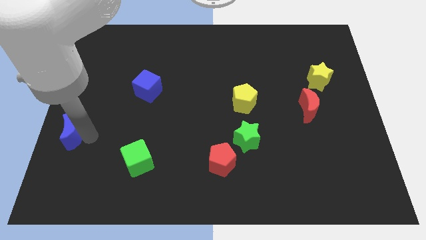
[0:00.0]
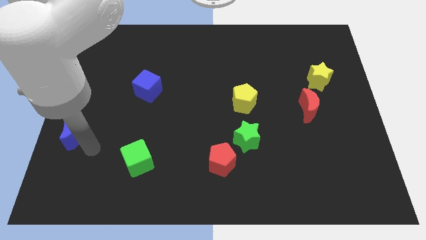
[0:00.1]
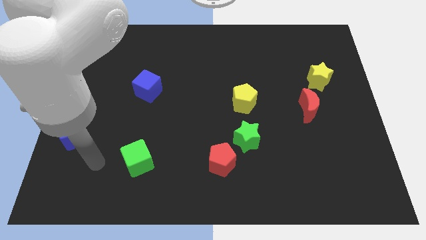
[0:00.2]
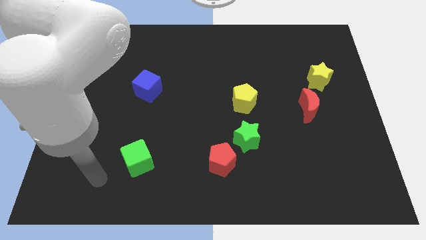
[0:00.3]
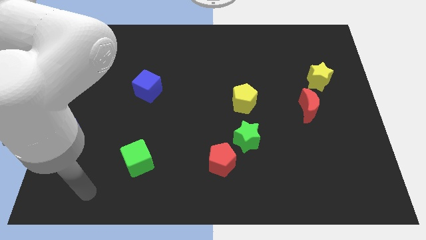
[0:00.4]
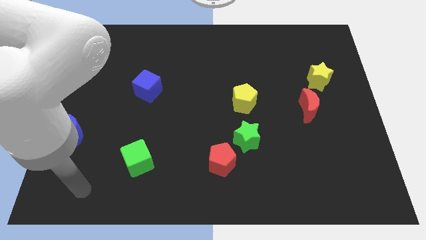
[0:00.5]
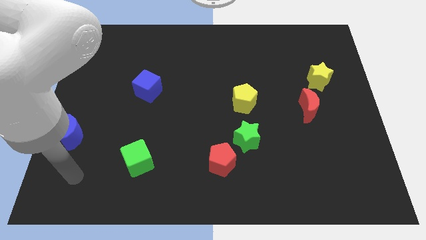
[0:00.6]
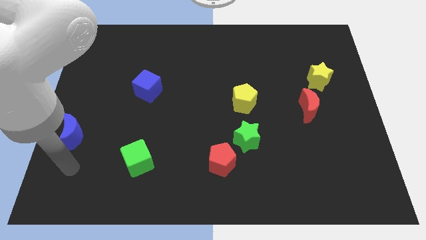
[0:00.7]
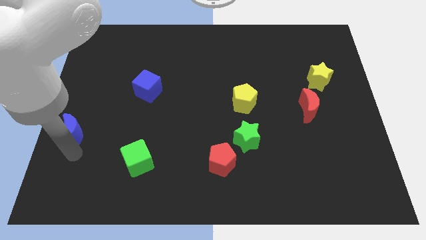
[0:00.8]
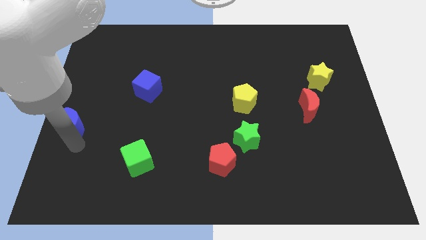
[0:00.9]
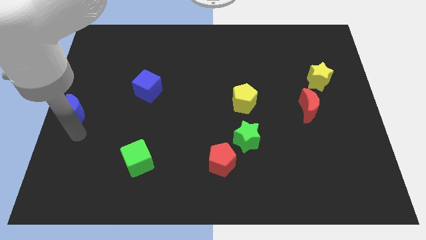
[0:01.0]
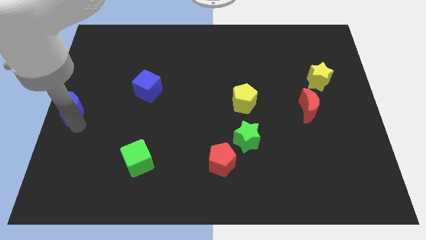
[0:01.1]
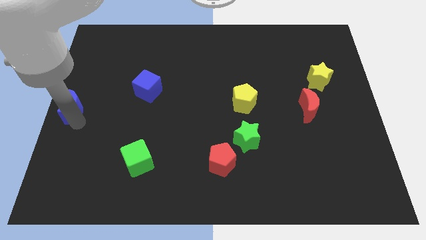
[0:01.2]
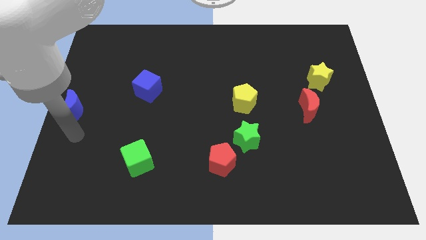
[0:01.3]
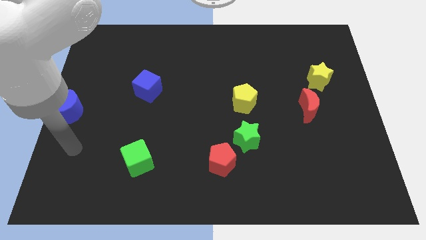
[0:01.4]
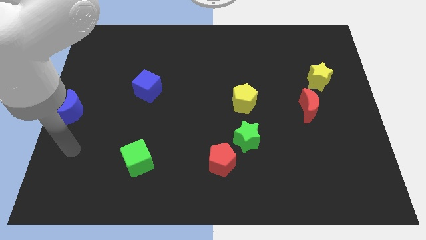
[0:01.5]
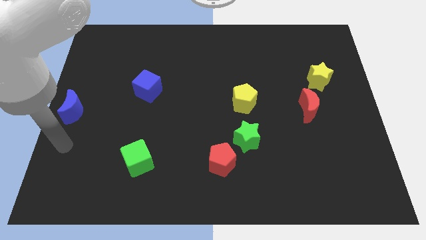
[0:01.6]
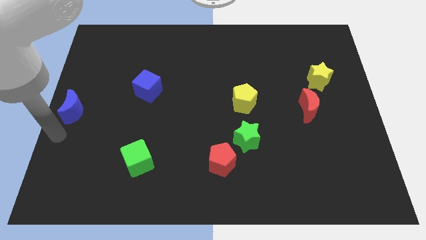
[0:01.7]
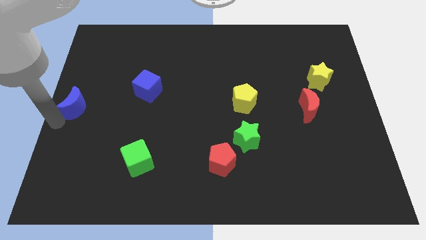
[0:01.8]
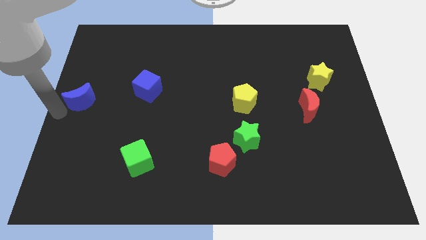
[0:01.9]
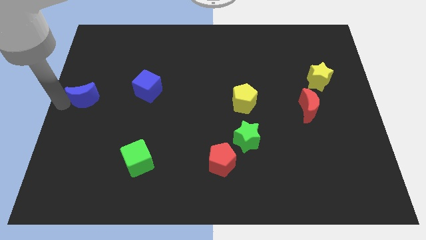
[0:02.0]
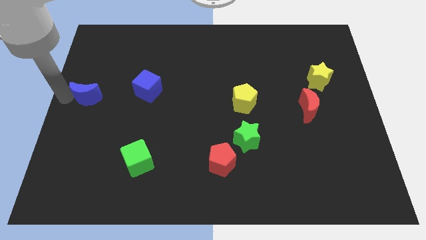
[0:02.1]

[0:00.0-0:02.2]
push the blue crescent to the left of the blue cube

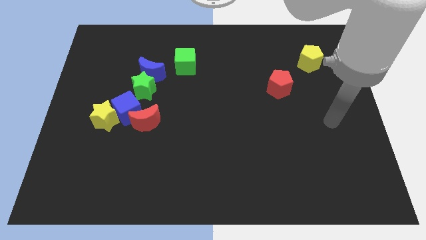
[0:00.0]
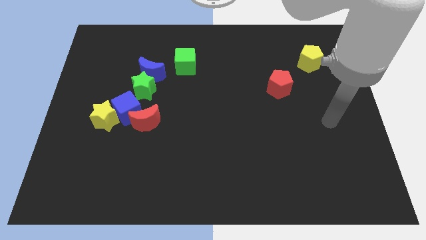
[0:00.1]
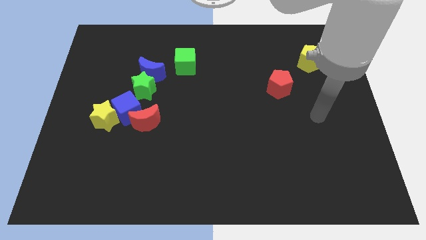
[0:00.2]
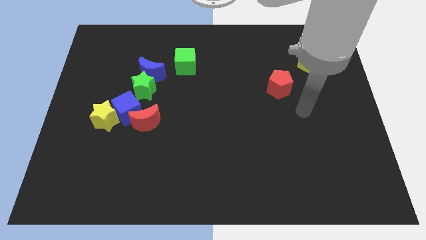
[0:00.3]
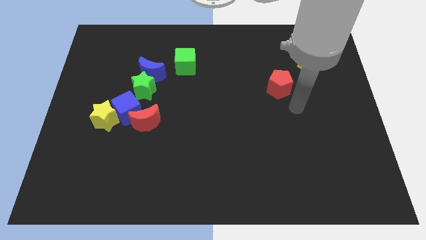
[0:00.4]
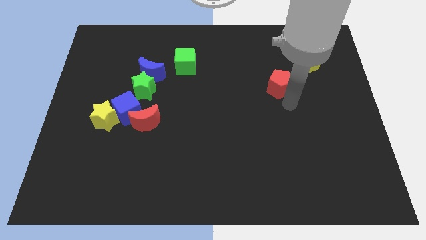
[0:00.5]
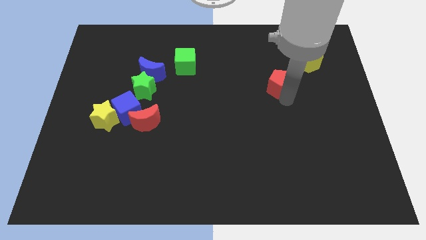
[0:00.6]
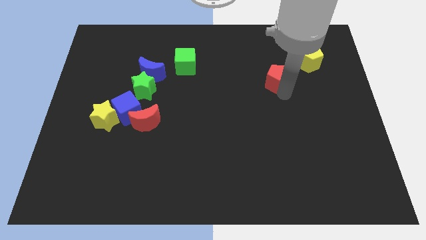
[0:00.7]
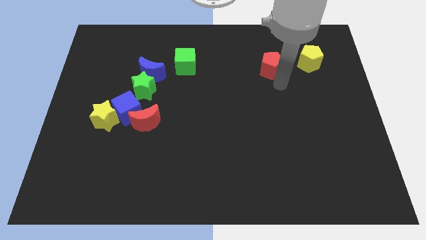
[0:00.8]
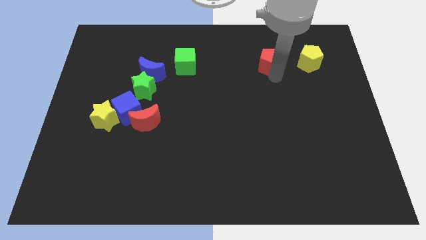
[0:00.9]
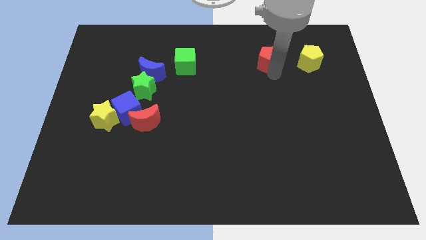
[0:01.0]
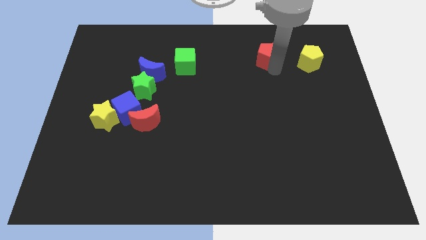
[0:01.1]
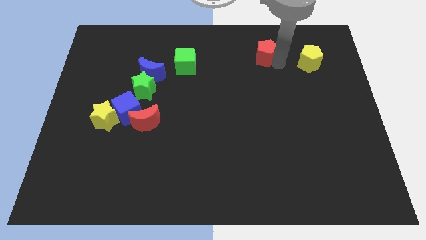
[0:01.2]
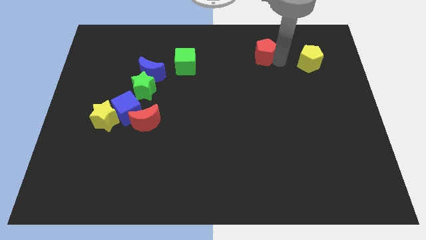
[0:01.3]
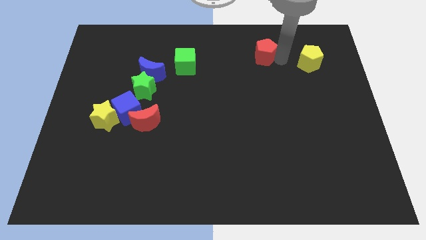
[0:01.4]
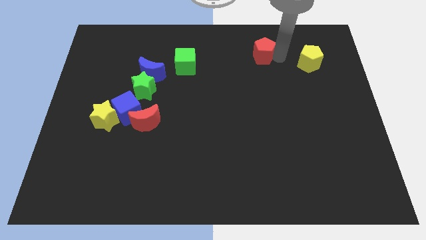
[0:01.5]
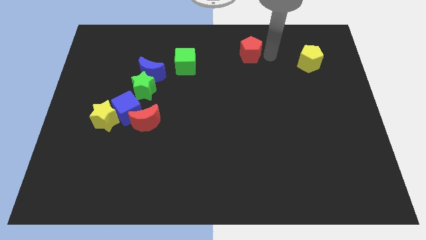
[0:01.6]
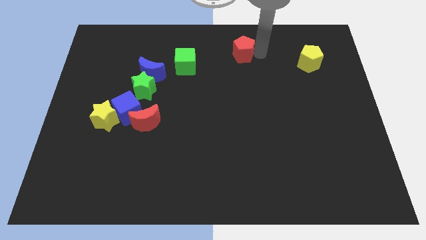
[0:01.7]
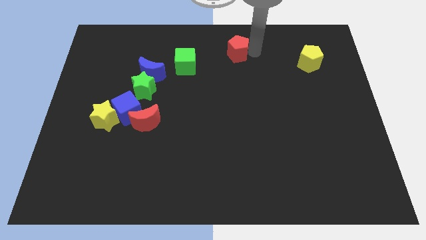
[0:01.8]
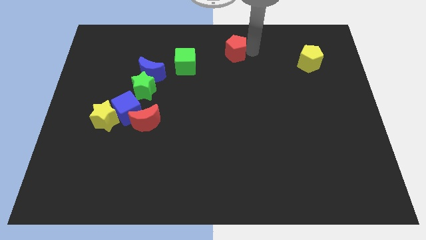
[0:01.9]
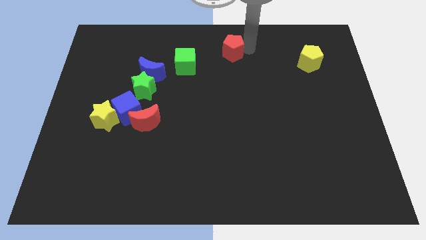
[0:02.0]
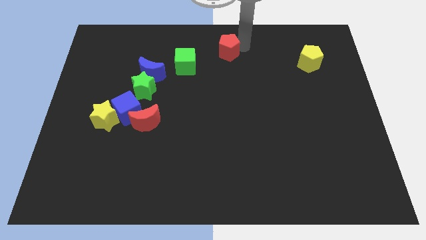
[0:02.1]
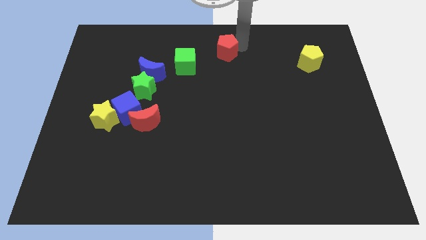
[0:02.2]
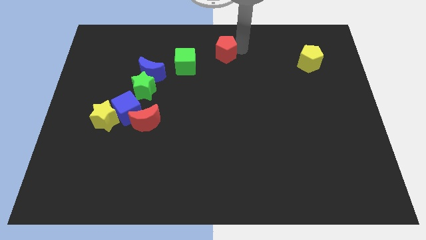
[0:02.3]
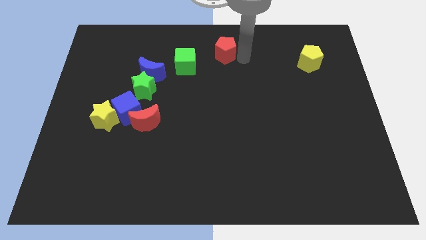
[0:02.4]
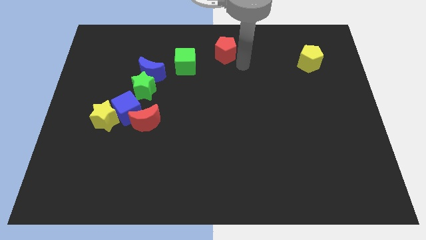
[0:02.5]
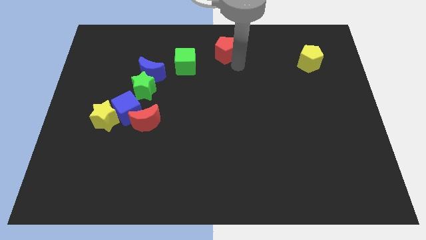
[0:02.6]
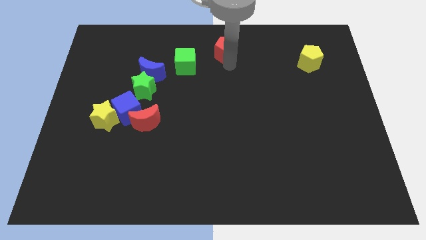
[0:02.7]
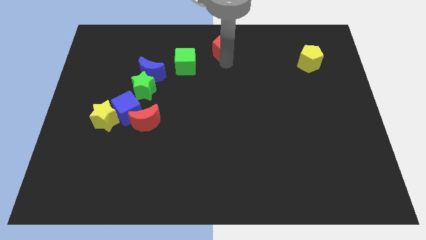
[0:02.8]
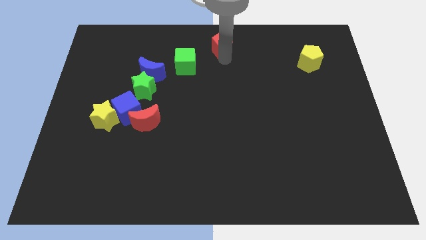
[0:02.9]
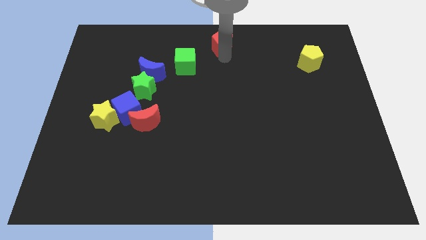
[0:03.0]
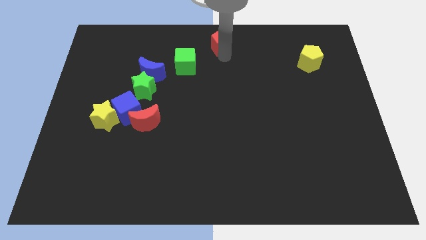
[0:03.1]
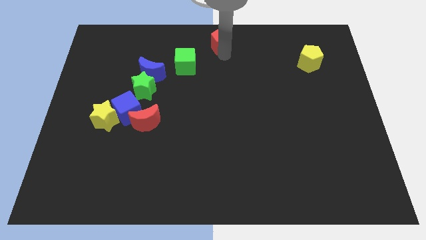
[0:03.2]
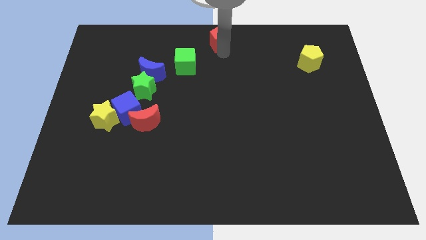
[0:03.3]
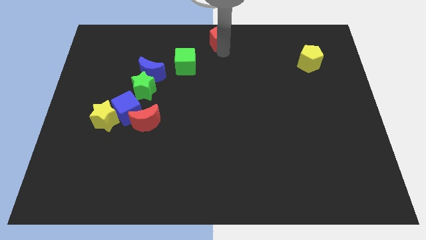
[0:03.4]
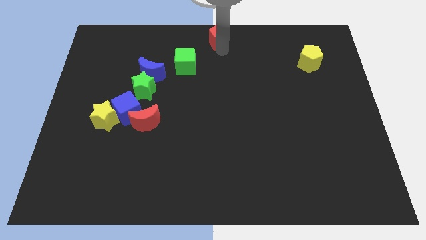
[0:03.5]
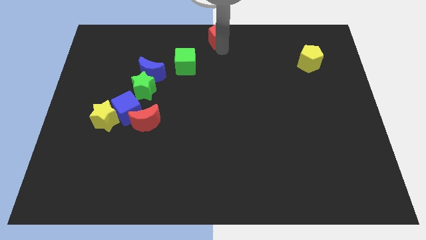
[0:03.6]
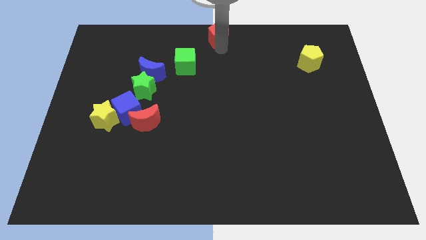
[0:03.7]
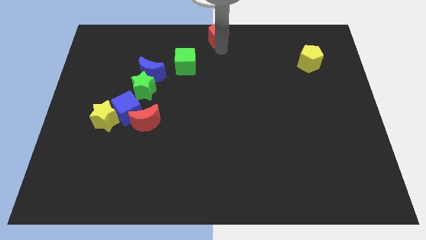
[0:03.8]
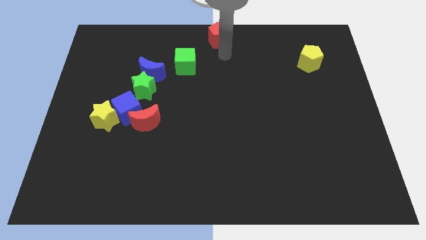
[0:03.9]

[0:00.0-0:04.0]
put the red pentagon at the top center of the board

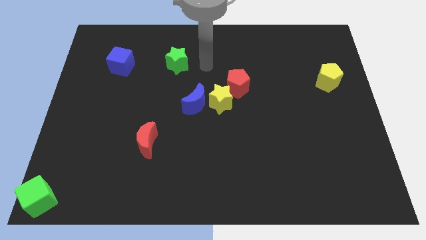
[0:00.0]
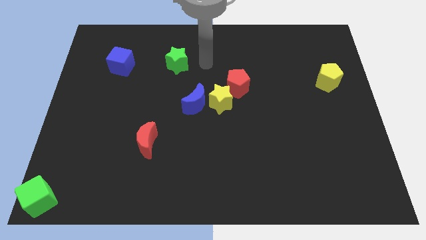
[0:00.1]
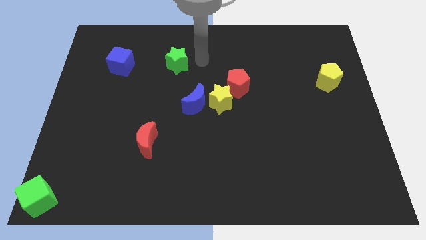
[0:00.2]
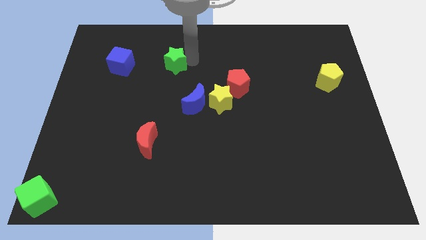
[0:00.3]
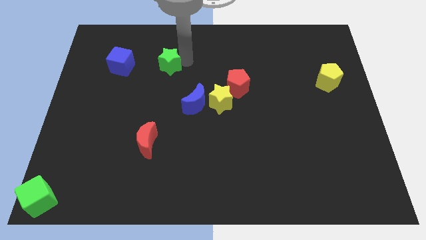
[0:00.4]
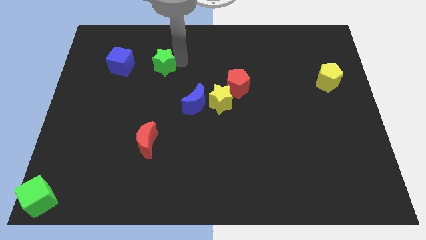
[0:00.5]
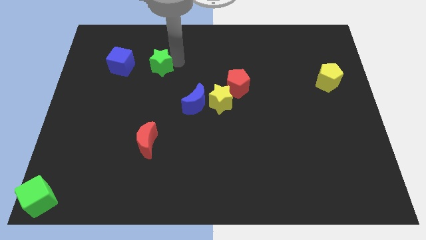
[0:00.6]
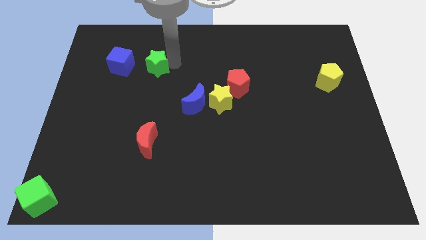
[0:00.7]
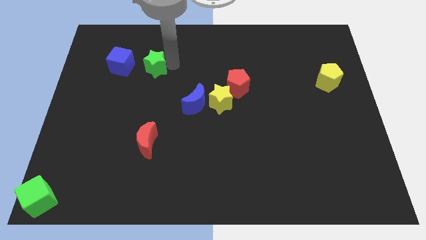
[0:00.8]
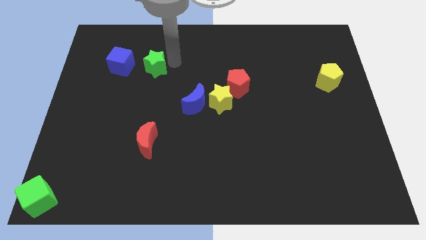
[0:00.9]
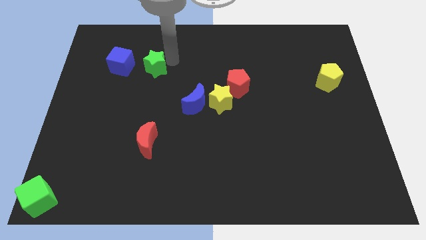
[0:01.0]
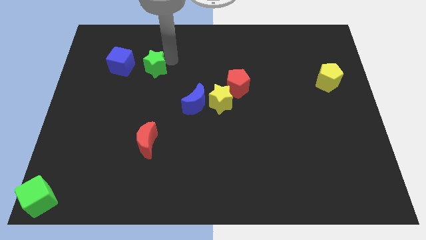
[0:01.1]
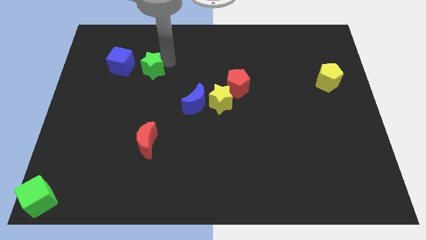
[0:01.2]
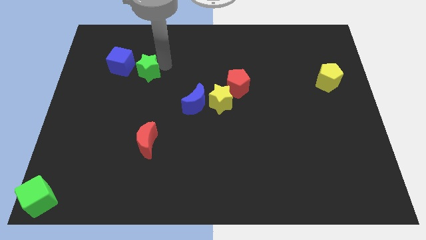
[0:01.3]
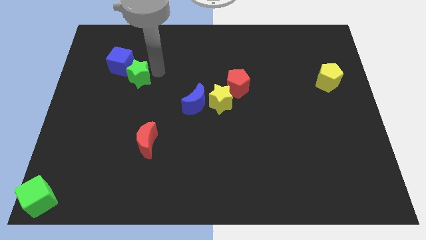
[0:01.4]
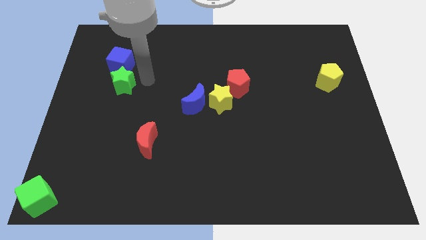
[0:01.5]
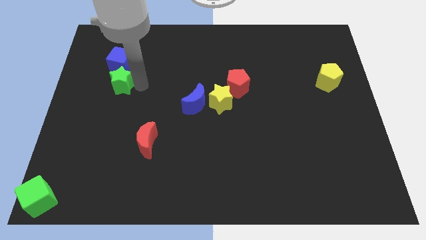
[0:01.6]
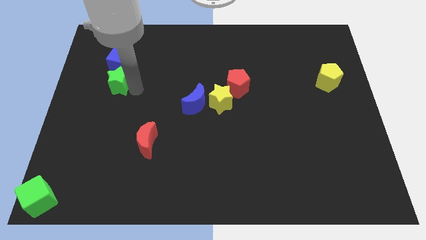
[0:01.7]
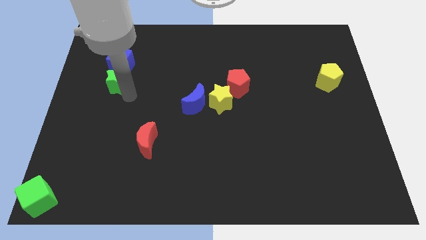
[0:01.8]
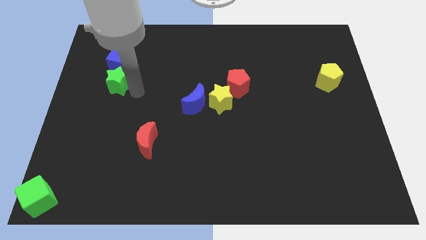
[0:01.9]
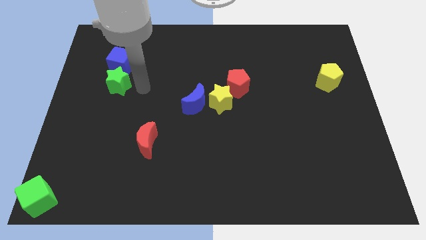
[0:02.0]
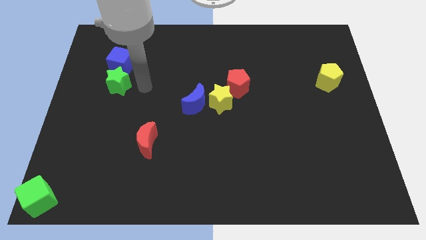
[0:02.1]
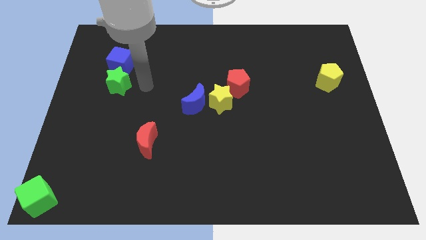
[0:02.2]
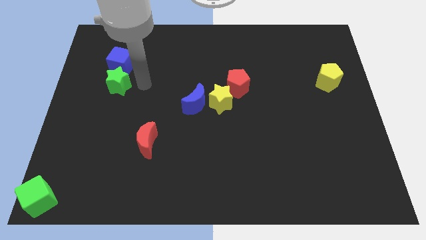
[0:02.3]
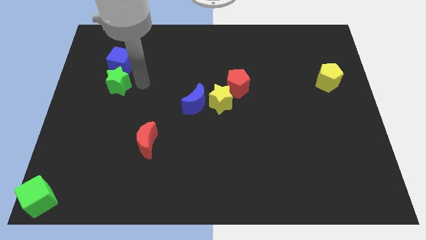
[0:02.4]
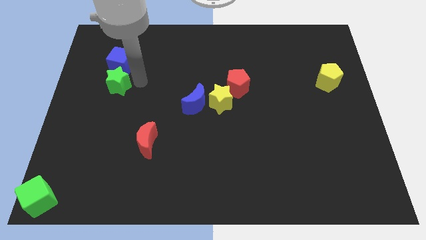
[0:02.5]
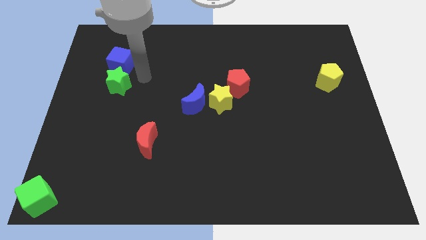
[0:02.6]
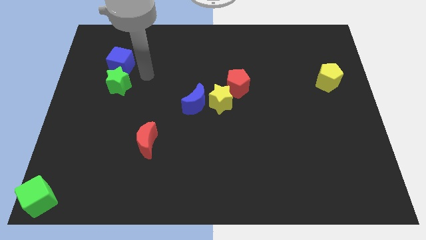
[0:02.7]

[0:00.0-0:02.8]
place the green star below the blue cube
